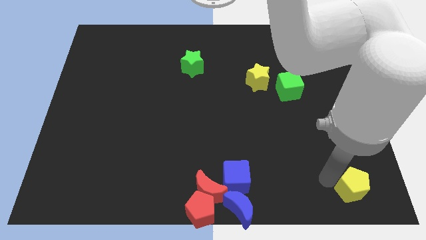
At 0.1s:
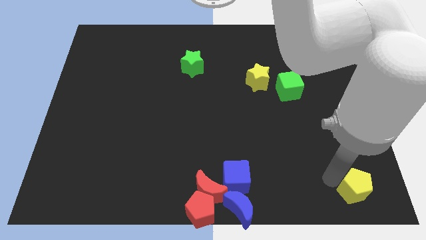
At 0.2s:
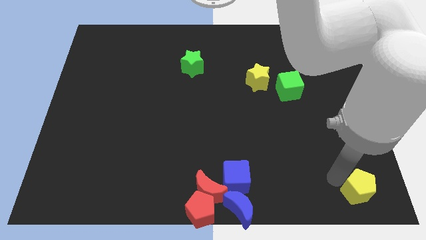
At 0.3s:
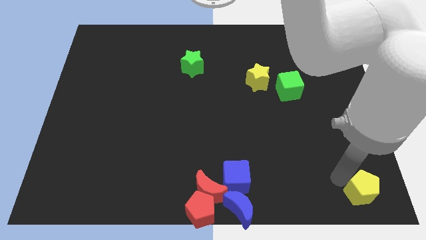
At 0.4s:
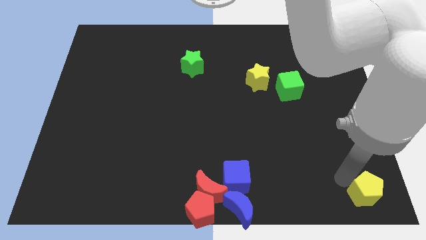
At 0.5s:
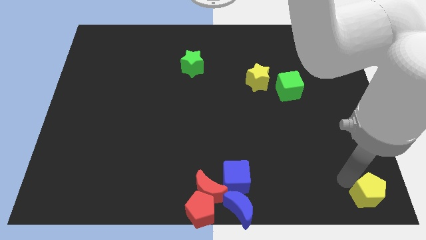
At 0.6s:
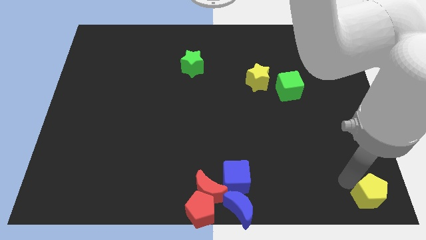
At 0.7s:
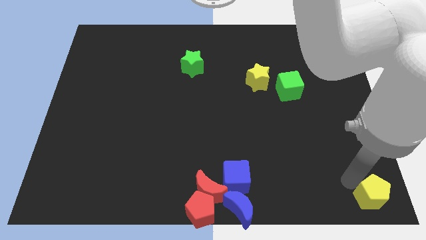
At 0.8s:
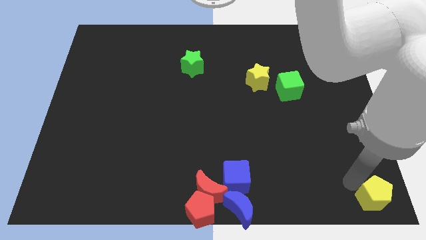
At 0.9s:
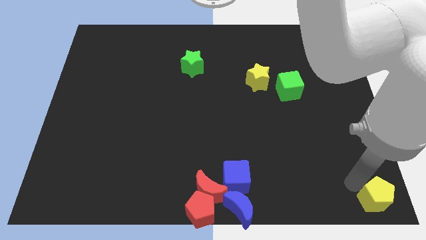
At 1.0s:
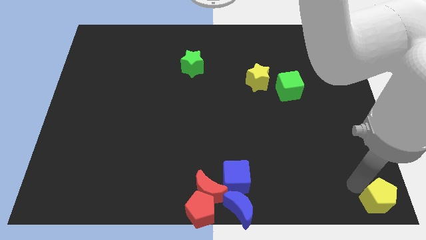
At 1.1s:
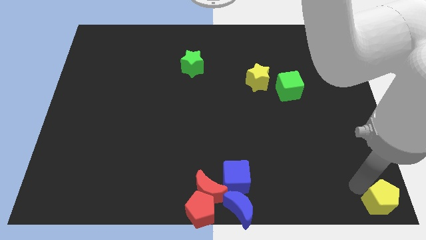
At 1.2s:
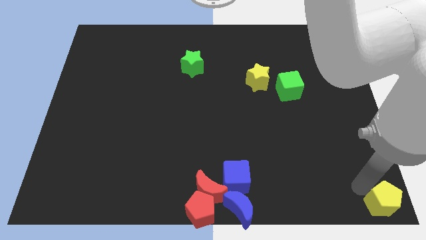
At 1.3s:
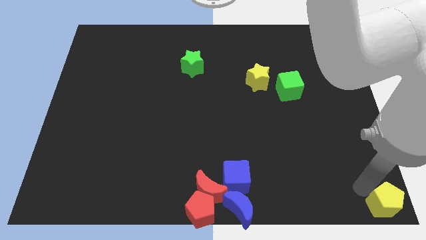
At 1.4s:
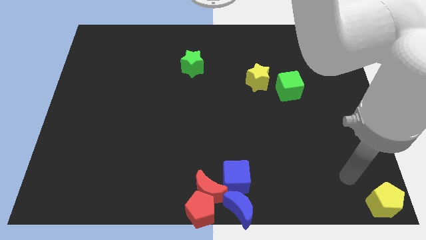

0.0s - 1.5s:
place yellow pentagon at bottom right end

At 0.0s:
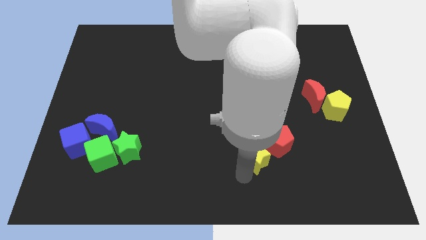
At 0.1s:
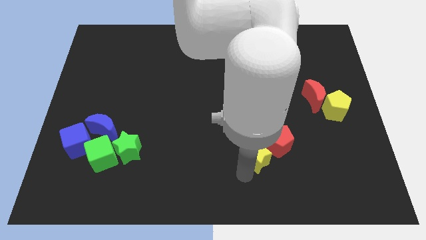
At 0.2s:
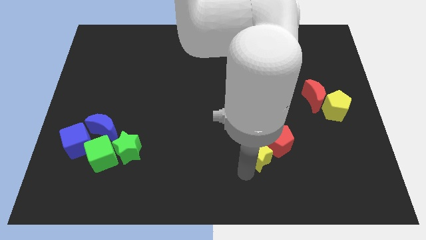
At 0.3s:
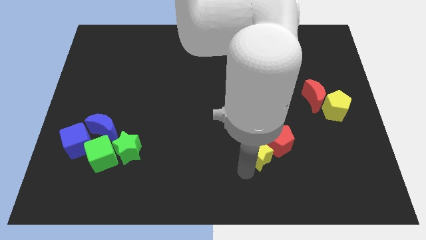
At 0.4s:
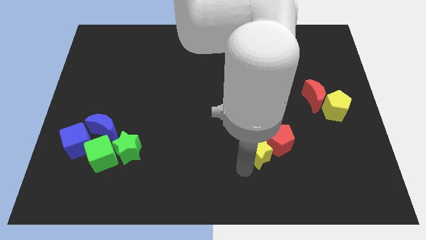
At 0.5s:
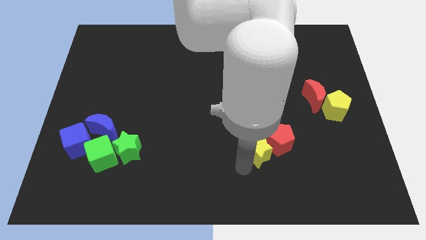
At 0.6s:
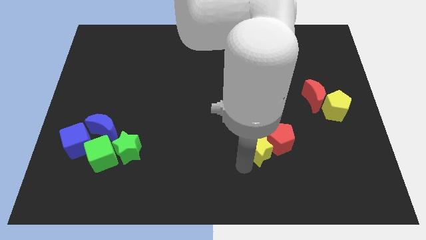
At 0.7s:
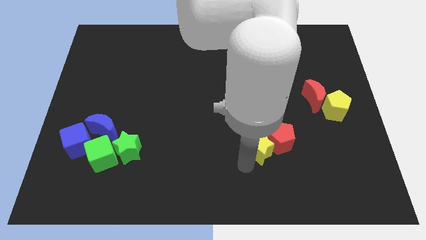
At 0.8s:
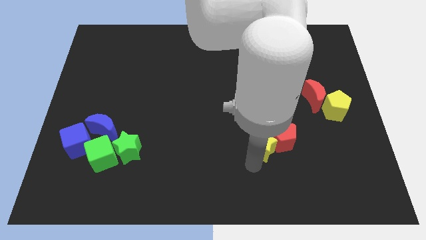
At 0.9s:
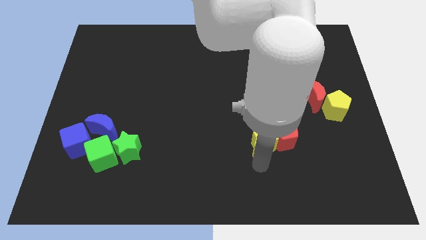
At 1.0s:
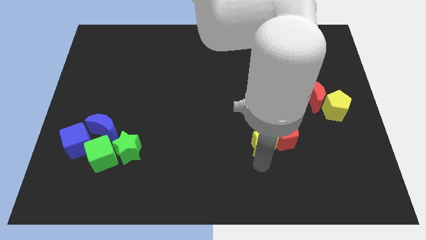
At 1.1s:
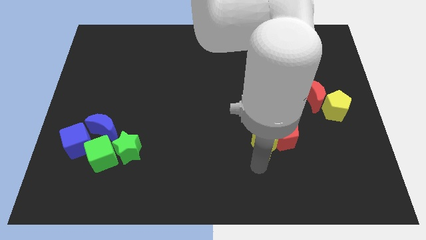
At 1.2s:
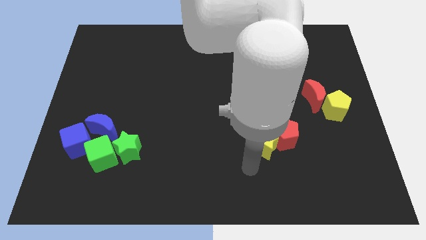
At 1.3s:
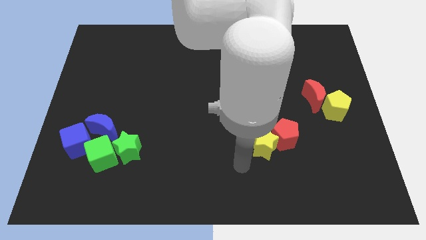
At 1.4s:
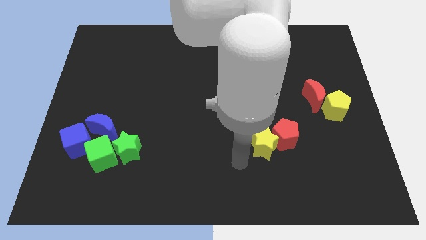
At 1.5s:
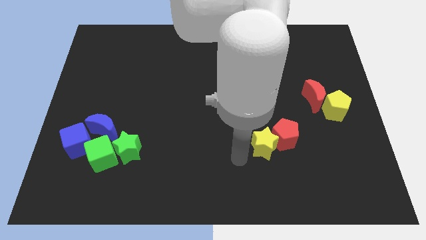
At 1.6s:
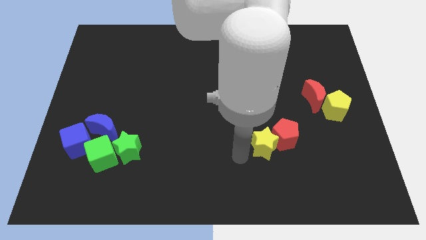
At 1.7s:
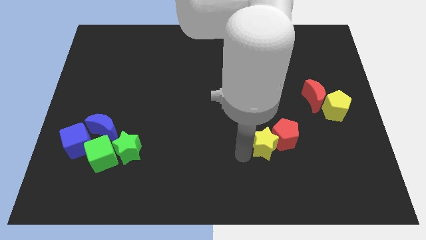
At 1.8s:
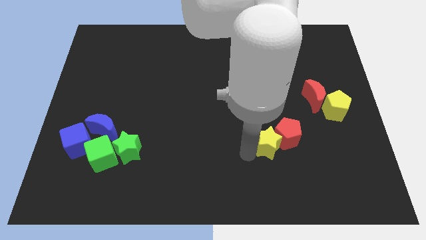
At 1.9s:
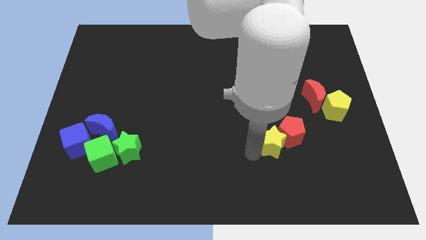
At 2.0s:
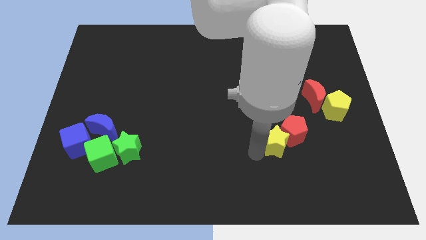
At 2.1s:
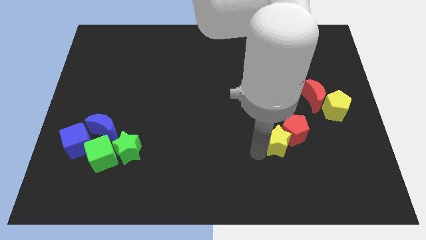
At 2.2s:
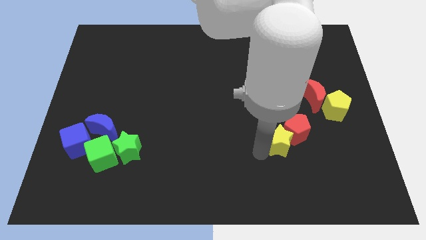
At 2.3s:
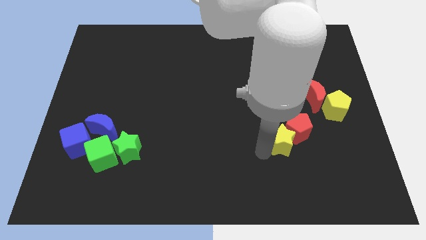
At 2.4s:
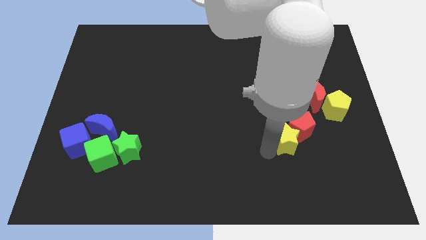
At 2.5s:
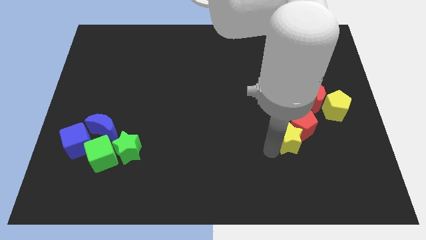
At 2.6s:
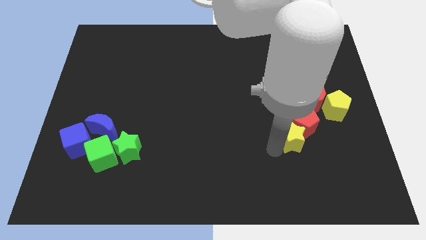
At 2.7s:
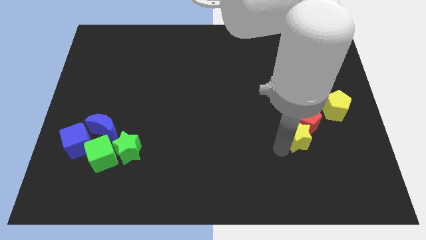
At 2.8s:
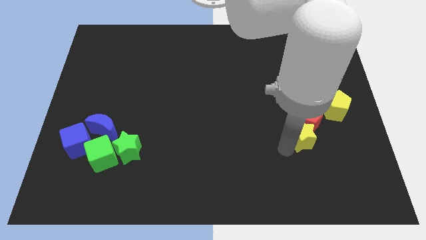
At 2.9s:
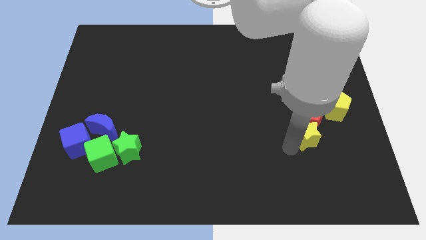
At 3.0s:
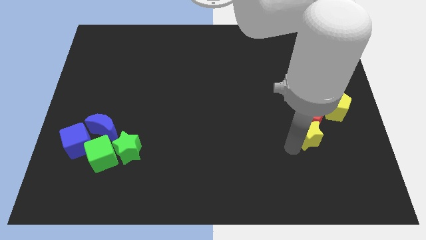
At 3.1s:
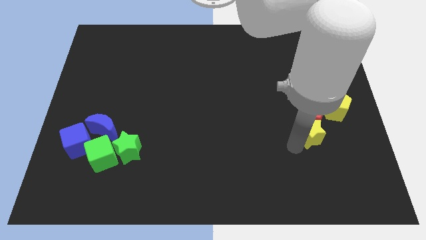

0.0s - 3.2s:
move the yellow star red pentagon towards the red crescent and yellow pentagon

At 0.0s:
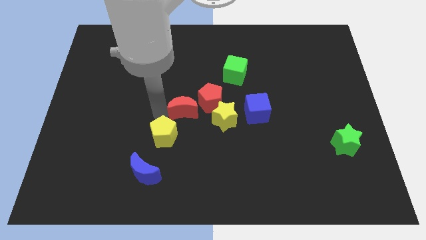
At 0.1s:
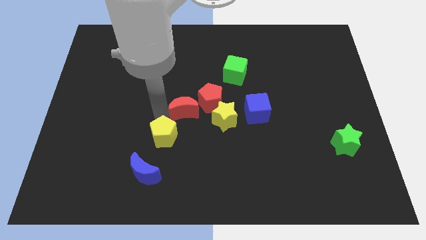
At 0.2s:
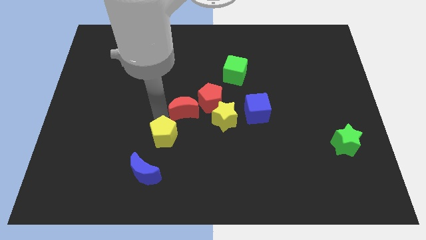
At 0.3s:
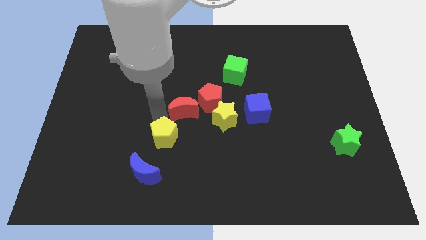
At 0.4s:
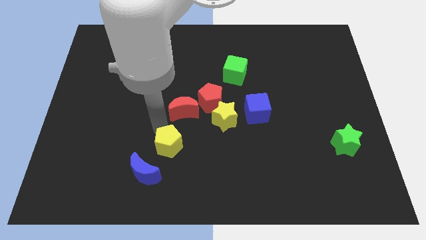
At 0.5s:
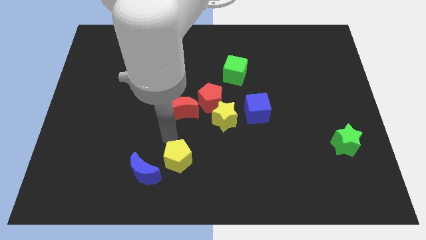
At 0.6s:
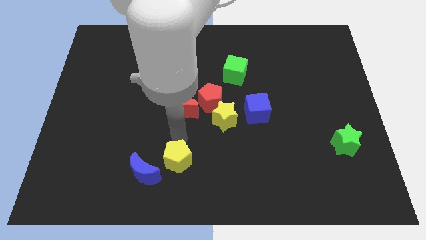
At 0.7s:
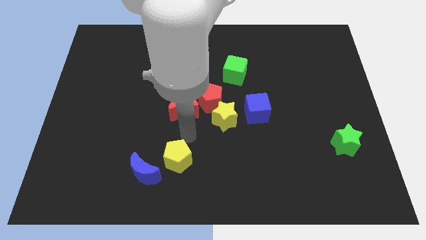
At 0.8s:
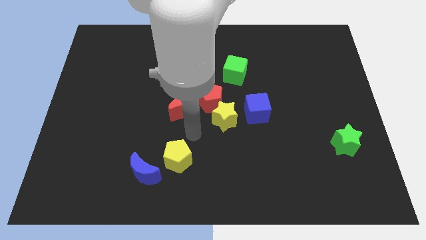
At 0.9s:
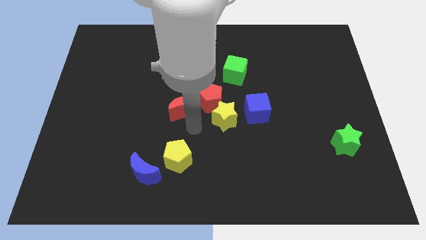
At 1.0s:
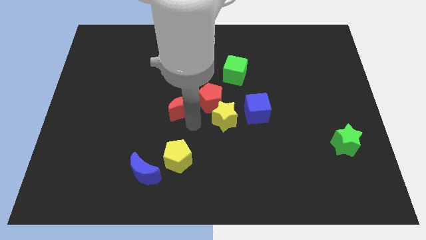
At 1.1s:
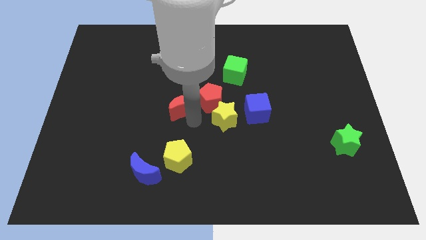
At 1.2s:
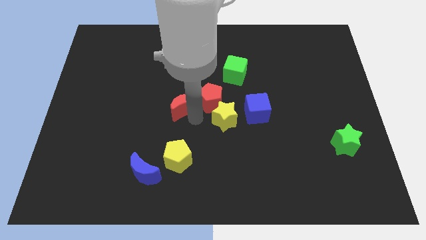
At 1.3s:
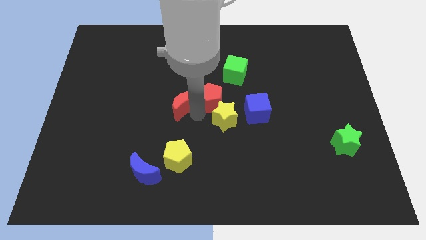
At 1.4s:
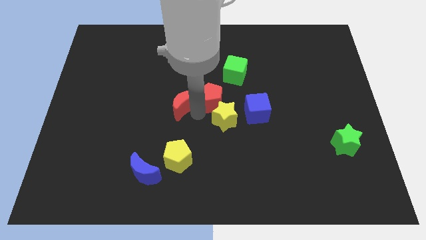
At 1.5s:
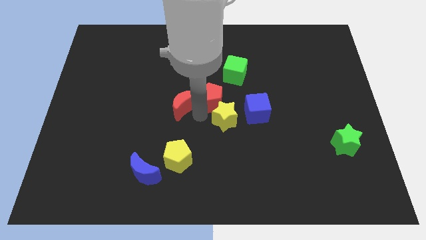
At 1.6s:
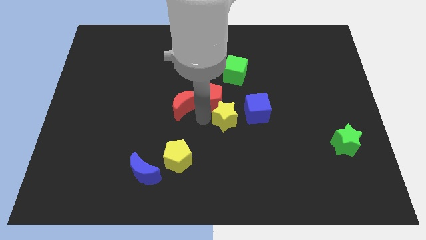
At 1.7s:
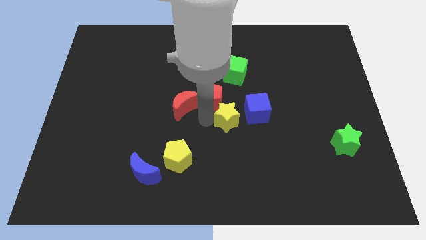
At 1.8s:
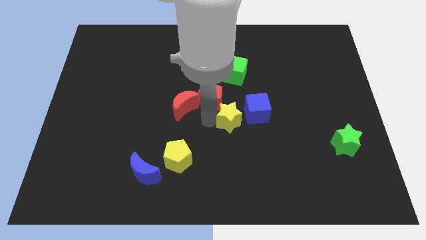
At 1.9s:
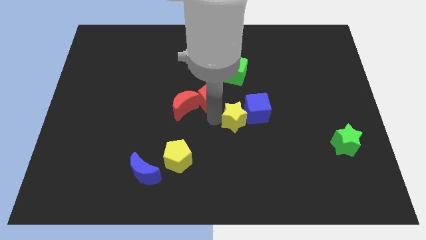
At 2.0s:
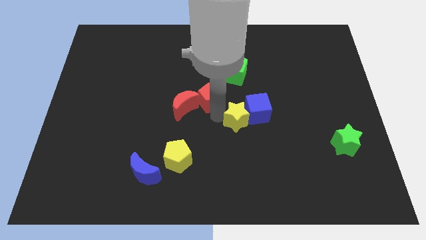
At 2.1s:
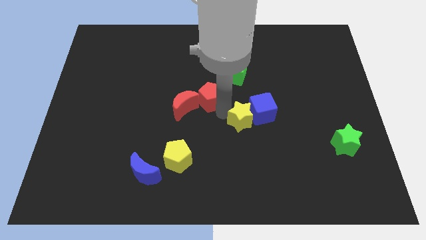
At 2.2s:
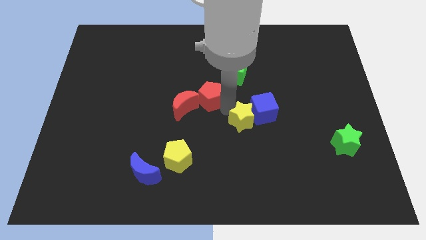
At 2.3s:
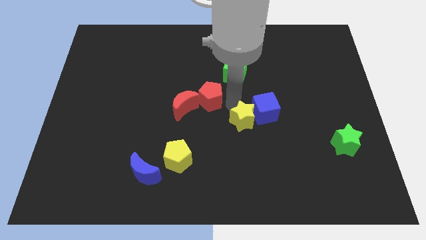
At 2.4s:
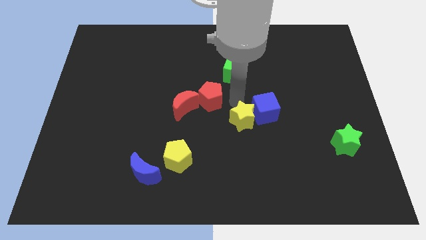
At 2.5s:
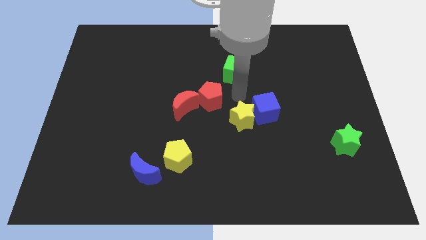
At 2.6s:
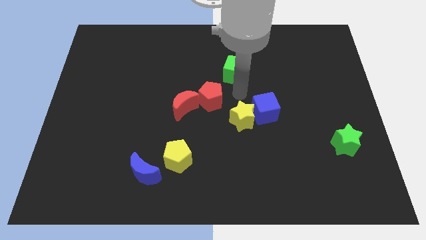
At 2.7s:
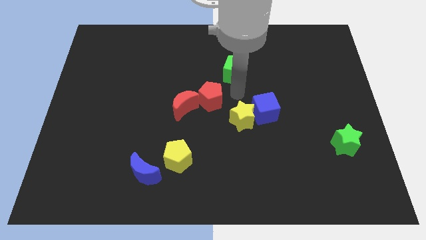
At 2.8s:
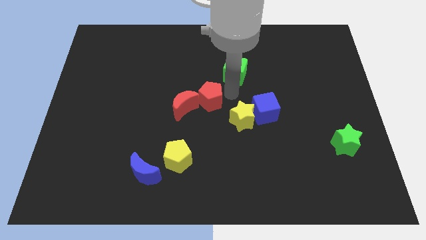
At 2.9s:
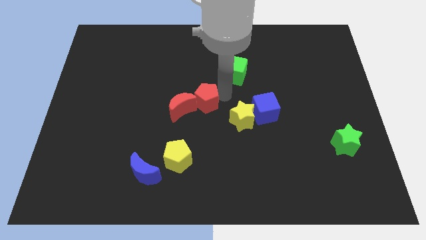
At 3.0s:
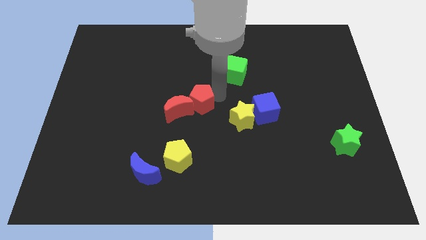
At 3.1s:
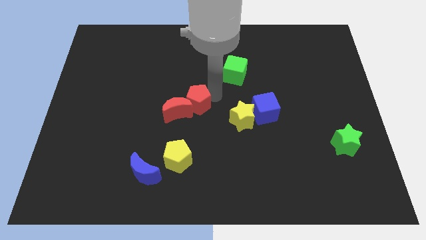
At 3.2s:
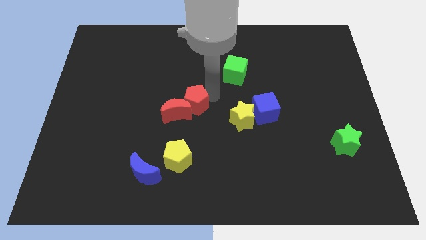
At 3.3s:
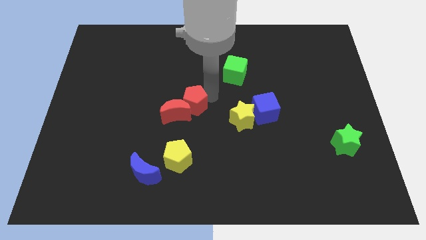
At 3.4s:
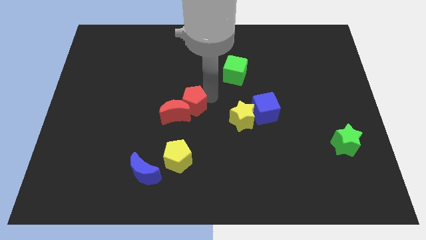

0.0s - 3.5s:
separate the red block with yellow star and yellow pentagon

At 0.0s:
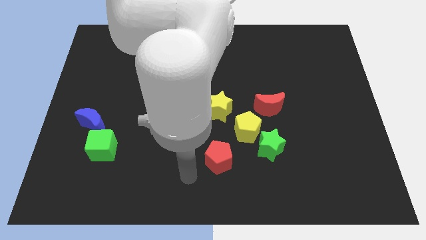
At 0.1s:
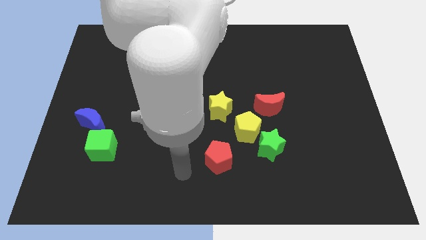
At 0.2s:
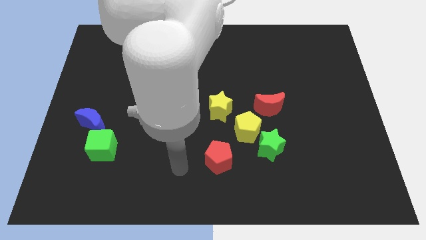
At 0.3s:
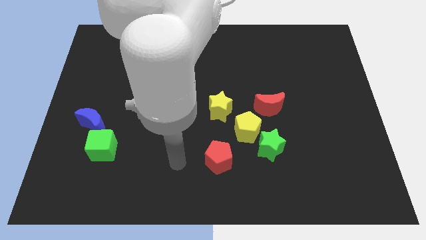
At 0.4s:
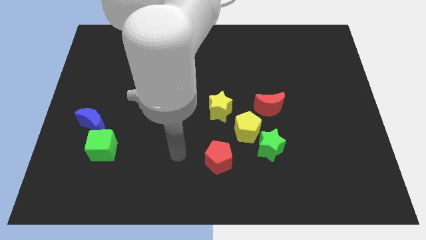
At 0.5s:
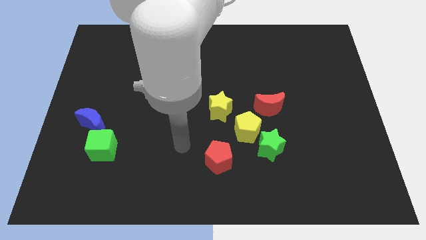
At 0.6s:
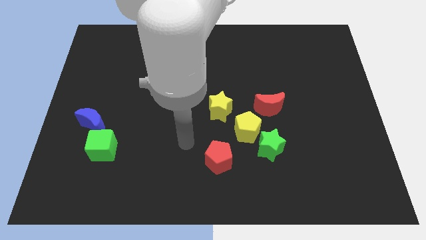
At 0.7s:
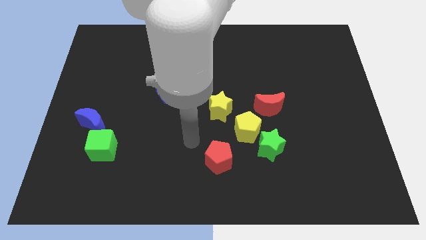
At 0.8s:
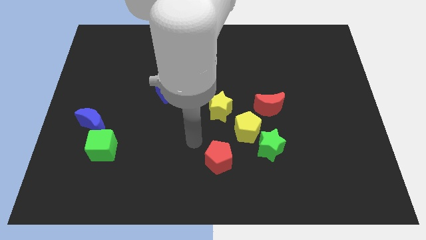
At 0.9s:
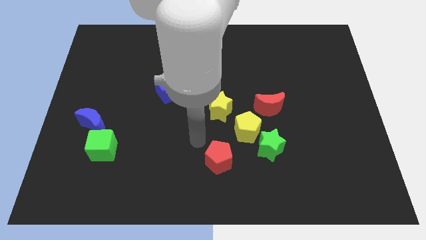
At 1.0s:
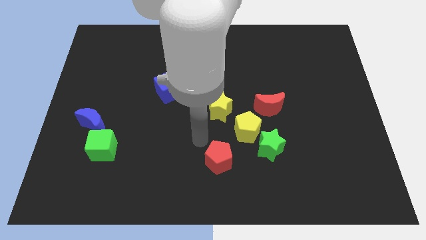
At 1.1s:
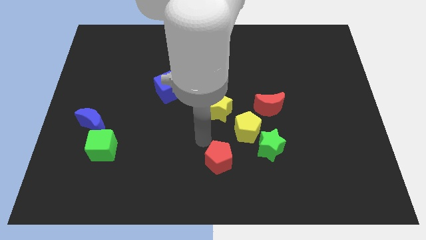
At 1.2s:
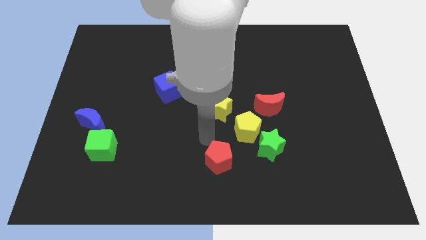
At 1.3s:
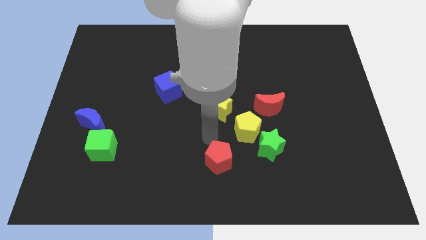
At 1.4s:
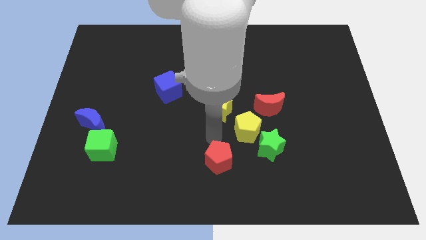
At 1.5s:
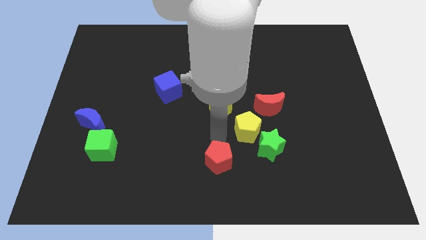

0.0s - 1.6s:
place the arm on top of the red pentagon
